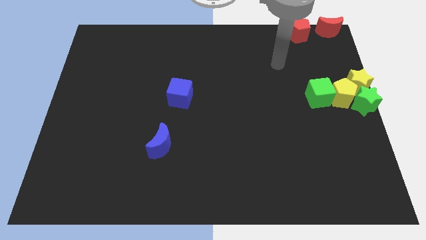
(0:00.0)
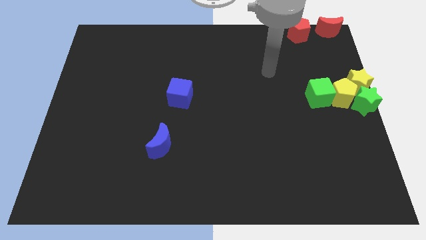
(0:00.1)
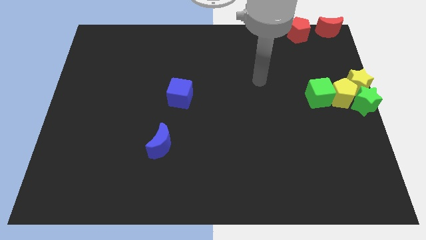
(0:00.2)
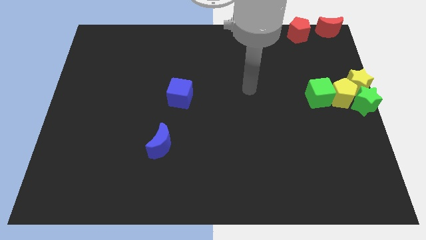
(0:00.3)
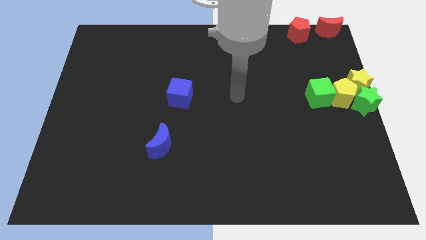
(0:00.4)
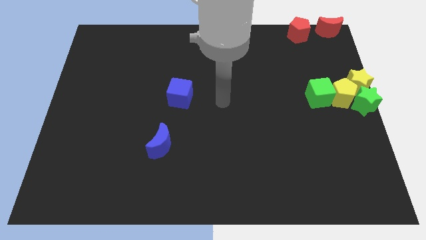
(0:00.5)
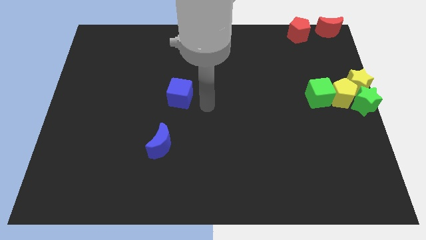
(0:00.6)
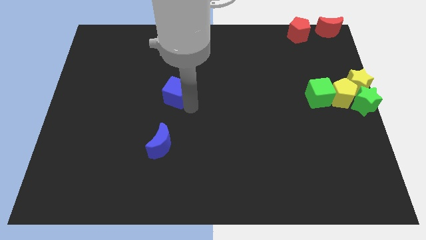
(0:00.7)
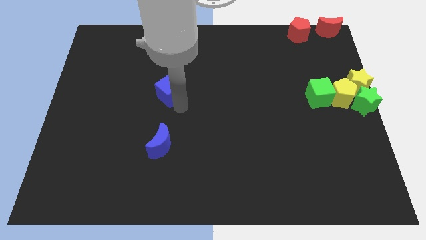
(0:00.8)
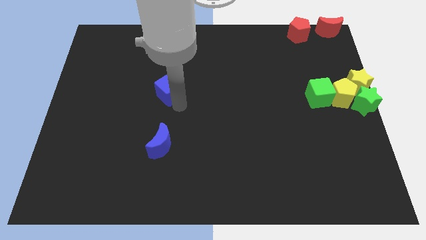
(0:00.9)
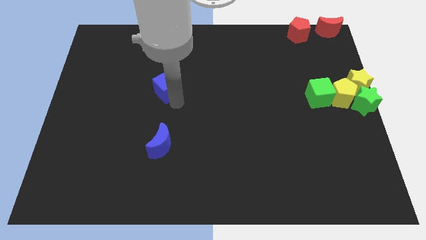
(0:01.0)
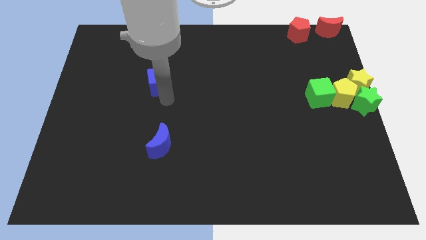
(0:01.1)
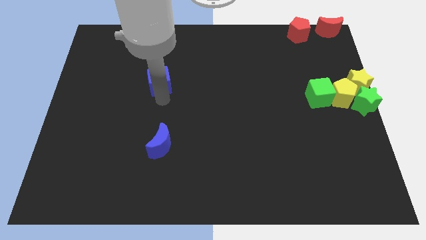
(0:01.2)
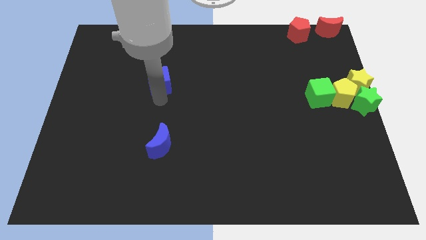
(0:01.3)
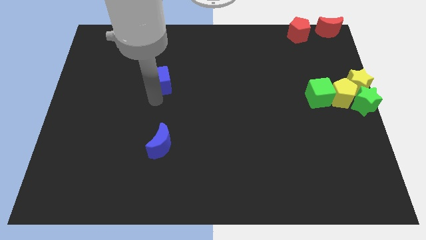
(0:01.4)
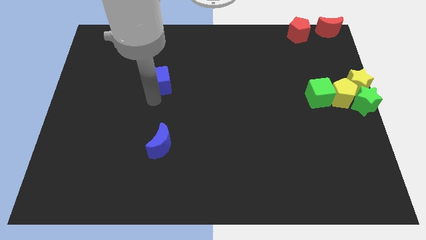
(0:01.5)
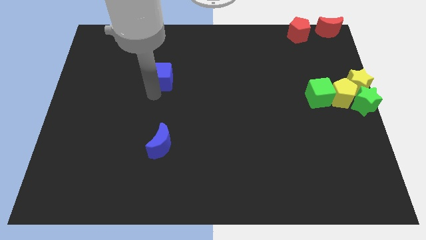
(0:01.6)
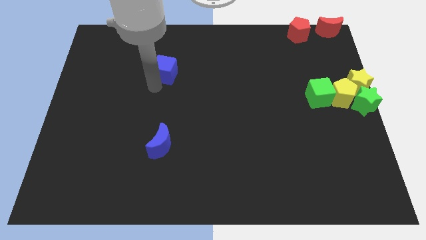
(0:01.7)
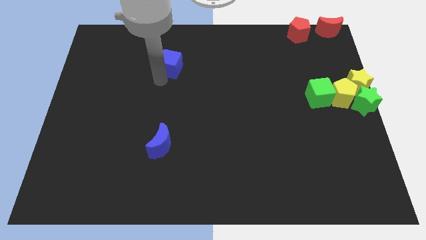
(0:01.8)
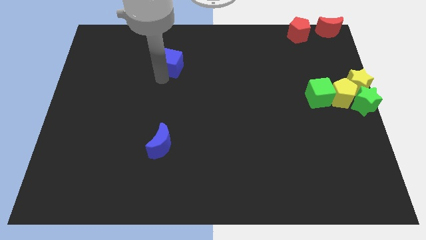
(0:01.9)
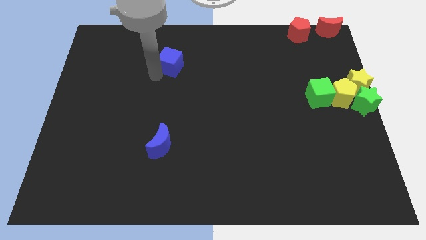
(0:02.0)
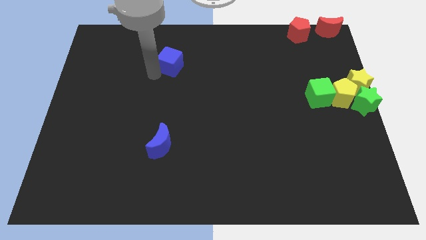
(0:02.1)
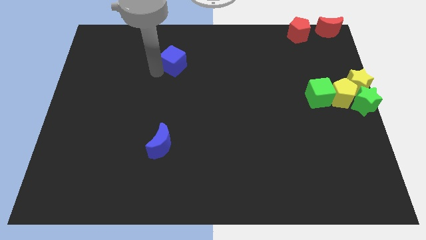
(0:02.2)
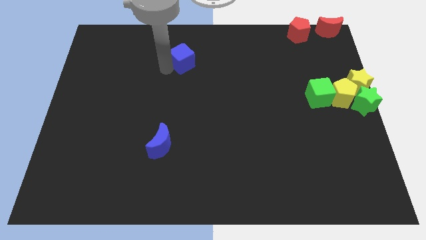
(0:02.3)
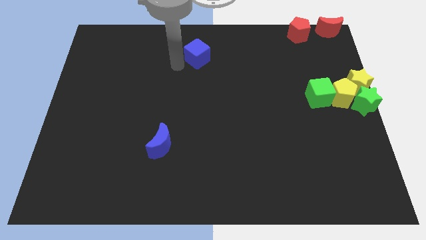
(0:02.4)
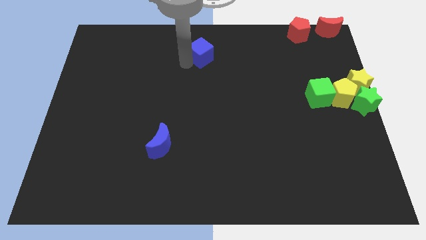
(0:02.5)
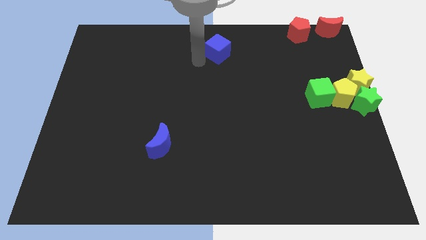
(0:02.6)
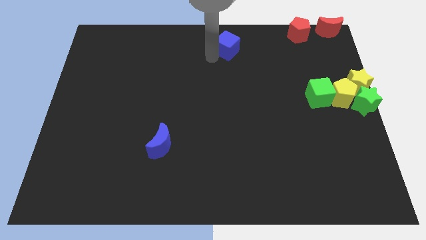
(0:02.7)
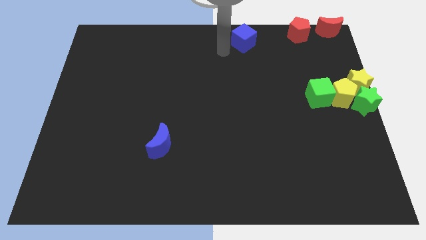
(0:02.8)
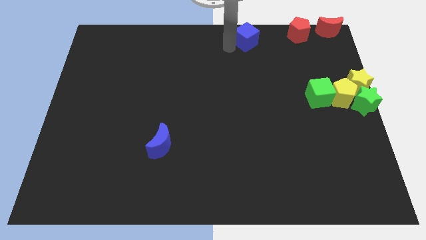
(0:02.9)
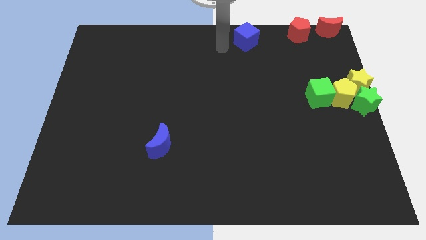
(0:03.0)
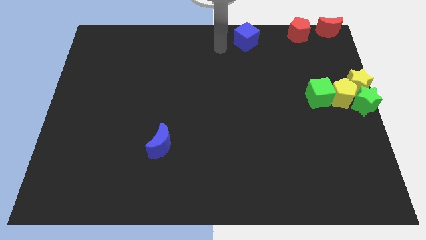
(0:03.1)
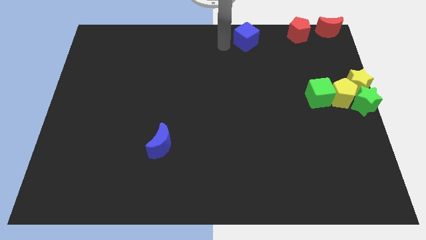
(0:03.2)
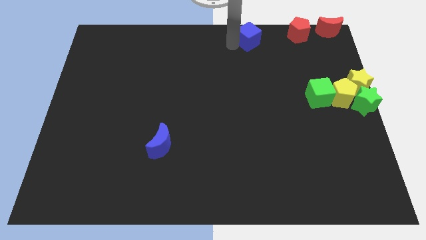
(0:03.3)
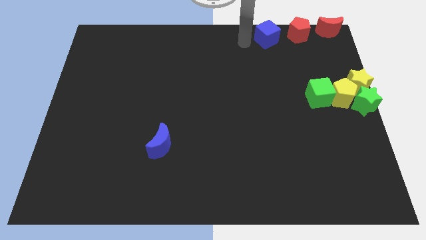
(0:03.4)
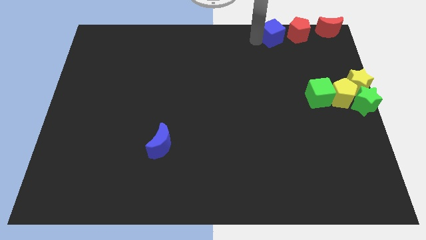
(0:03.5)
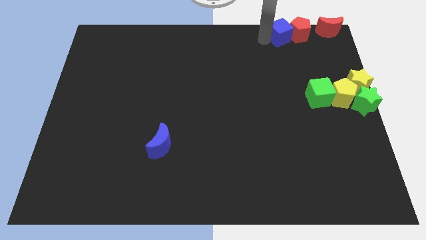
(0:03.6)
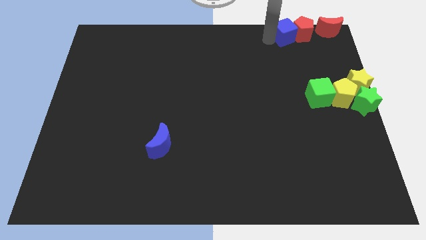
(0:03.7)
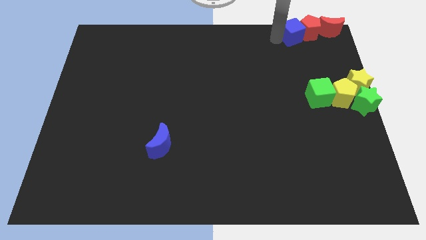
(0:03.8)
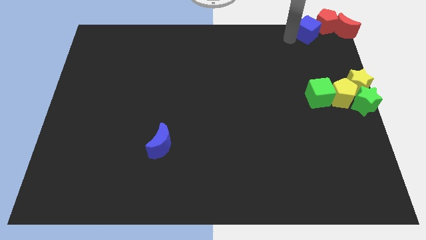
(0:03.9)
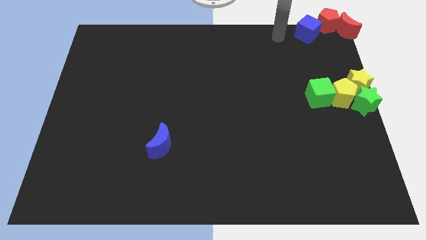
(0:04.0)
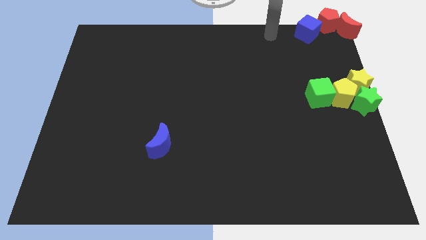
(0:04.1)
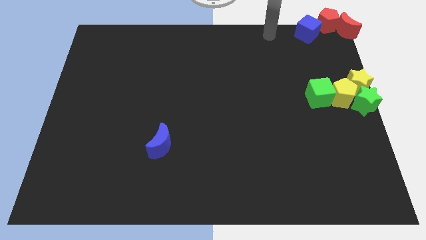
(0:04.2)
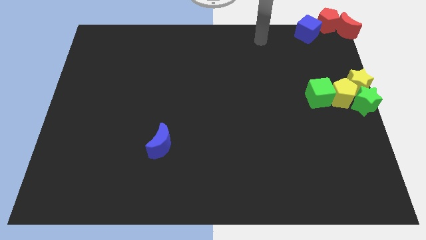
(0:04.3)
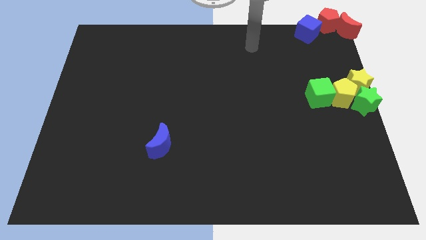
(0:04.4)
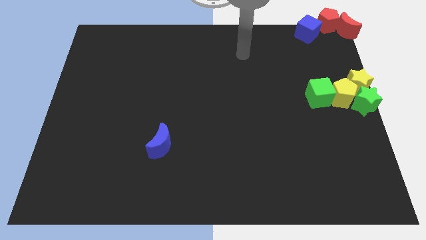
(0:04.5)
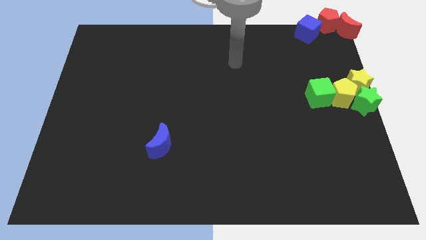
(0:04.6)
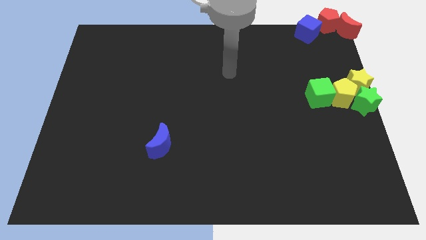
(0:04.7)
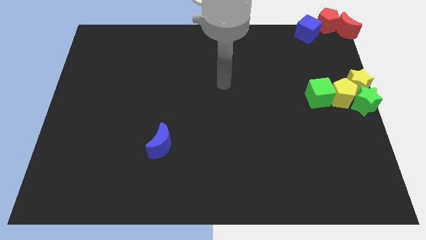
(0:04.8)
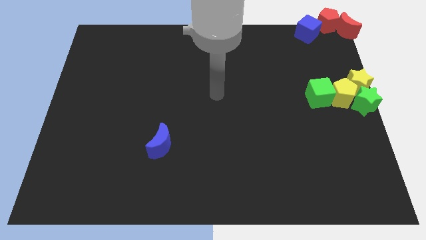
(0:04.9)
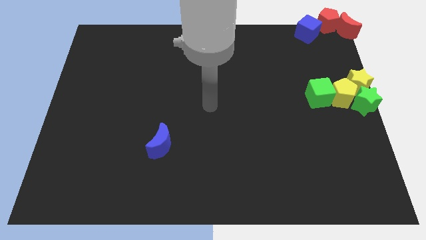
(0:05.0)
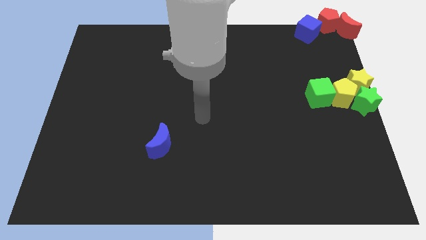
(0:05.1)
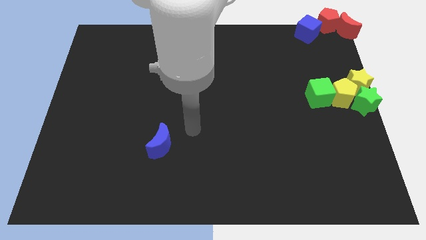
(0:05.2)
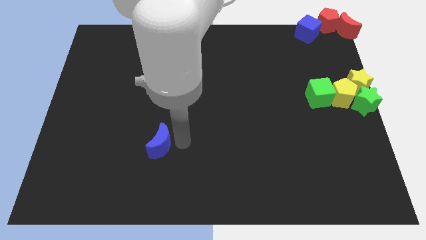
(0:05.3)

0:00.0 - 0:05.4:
push blue cube to the top right corner of the board

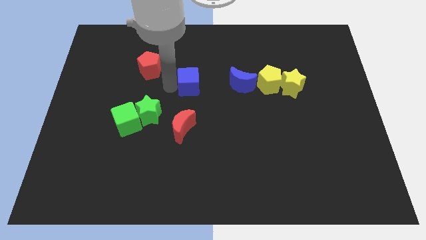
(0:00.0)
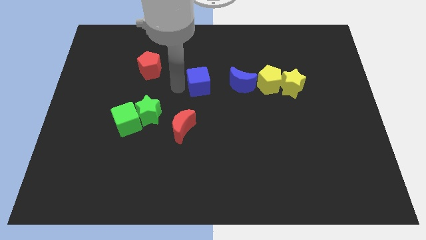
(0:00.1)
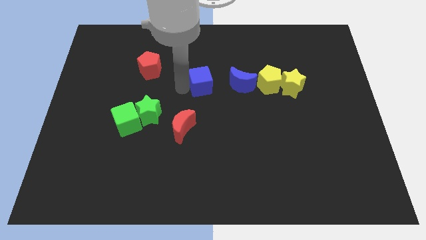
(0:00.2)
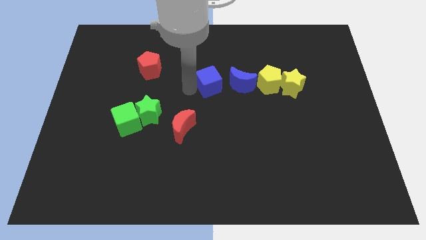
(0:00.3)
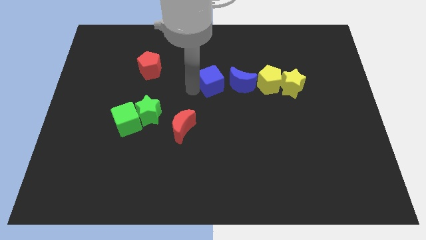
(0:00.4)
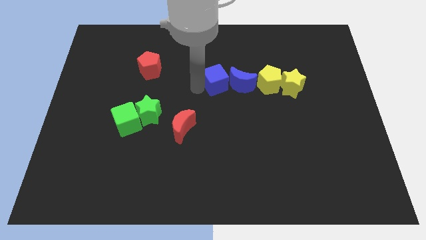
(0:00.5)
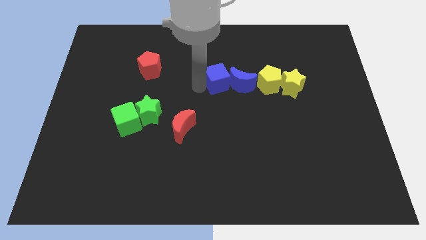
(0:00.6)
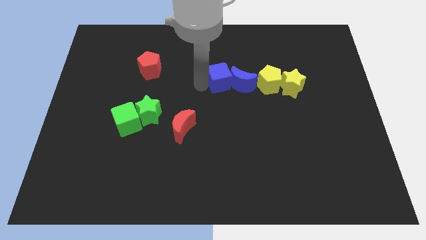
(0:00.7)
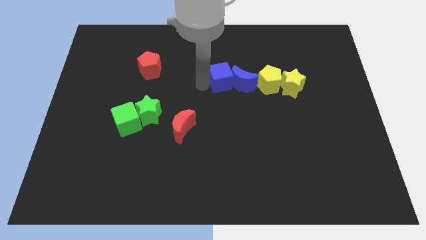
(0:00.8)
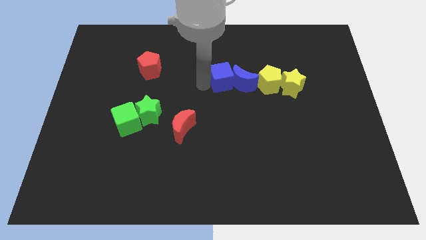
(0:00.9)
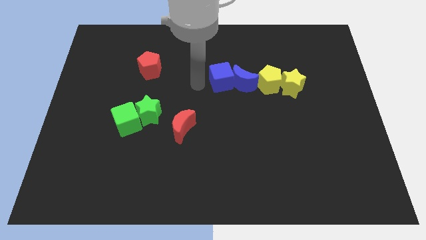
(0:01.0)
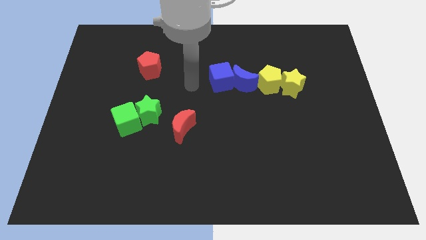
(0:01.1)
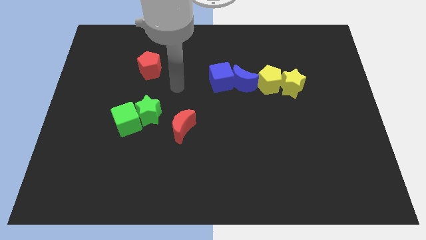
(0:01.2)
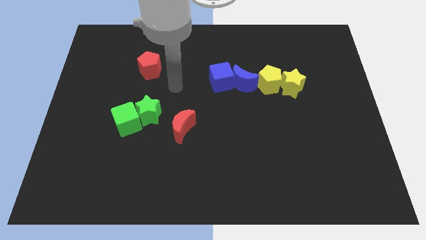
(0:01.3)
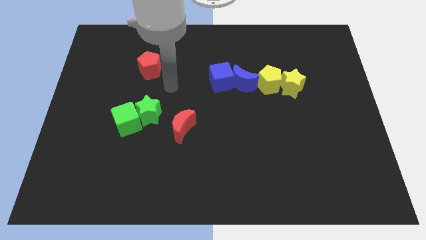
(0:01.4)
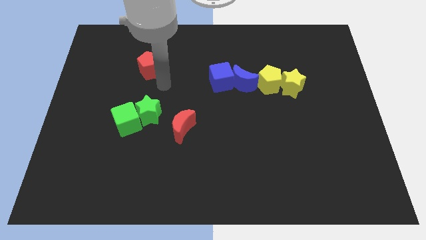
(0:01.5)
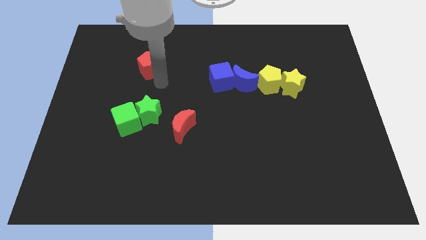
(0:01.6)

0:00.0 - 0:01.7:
place blue cube to the left side of blue moon

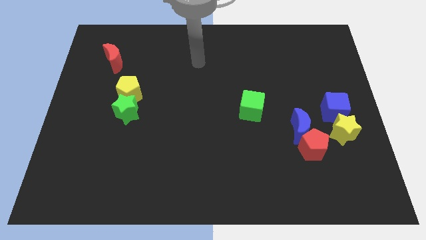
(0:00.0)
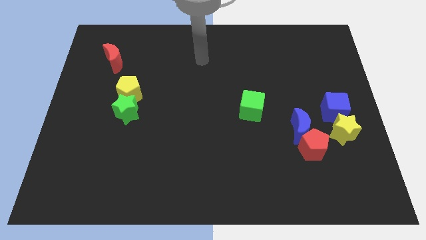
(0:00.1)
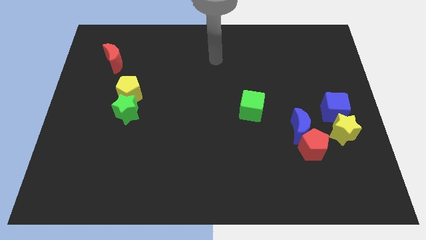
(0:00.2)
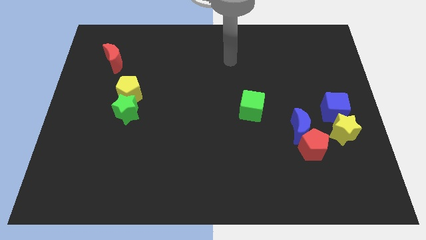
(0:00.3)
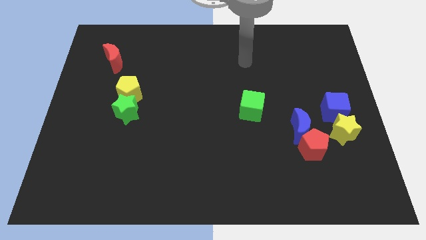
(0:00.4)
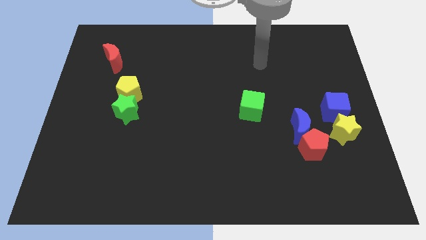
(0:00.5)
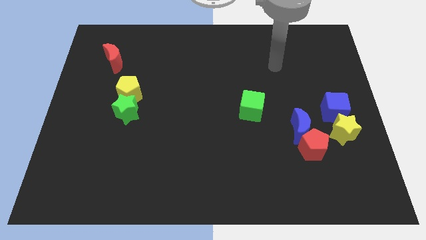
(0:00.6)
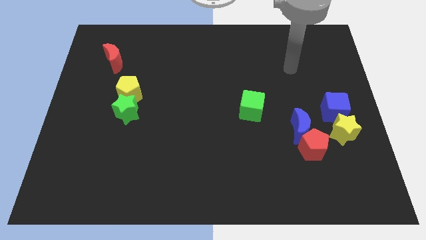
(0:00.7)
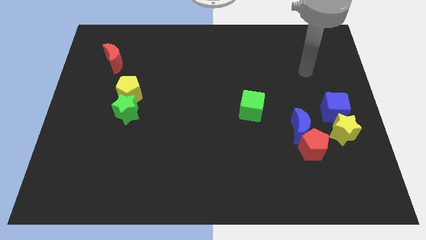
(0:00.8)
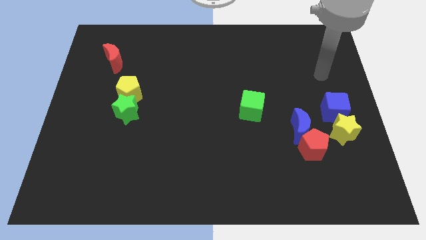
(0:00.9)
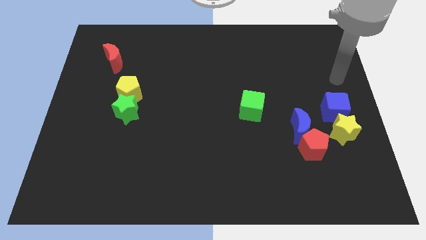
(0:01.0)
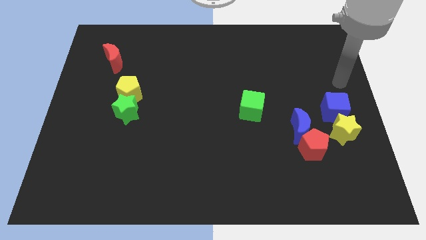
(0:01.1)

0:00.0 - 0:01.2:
place arm above blue cube

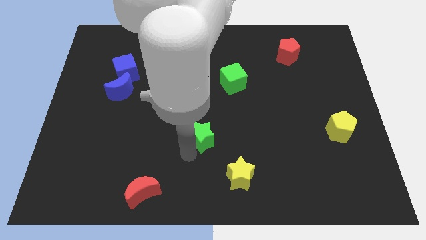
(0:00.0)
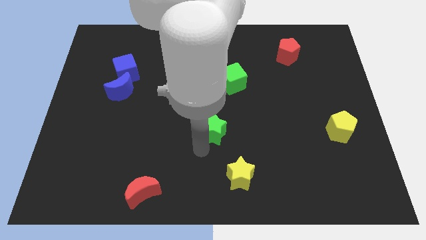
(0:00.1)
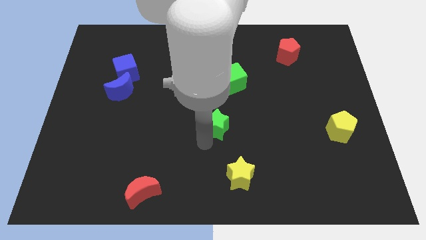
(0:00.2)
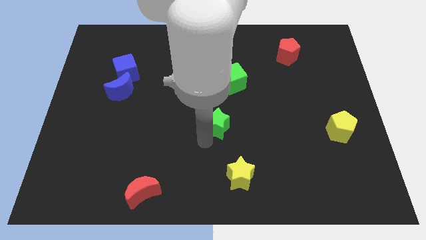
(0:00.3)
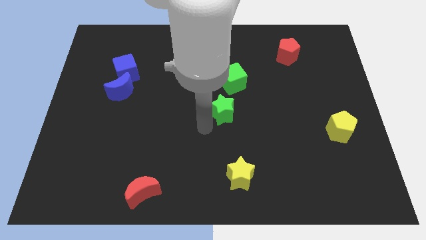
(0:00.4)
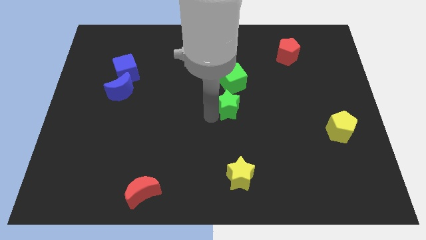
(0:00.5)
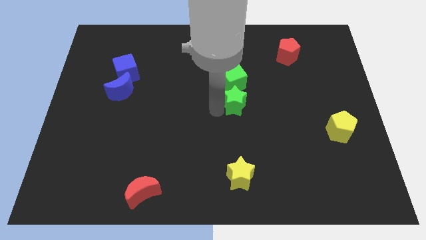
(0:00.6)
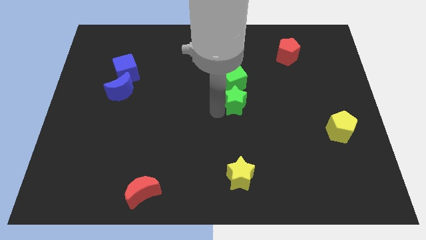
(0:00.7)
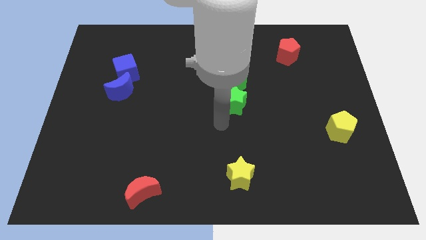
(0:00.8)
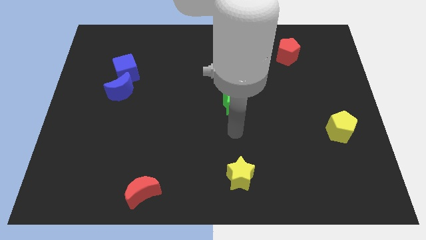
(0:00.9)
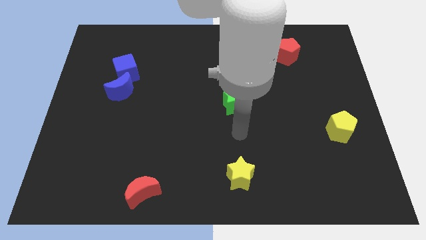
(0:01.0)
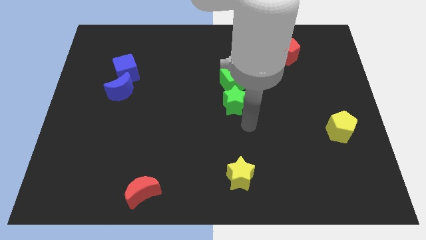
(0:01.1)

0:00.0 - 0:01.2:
push green star into green cube
